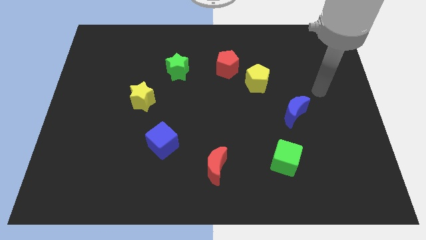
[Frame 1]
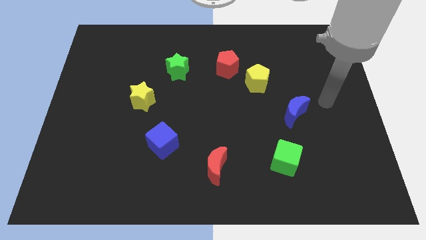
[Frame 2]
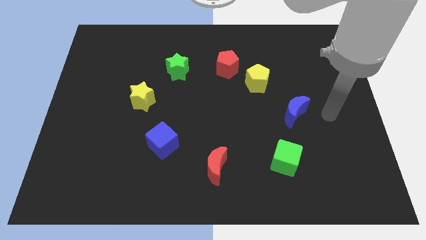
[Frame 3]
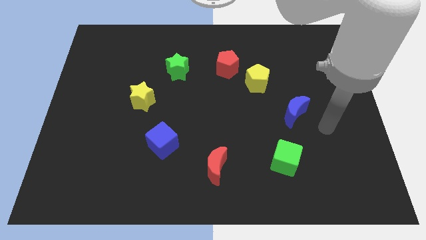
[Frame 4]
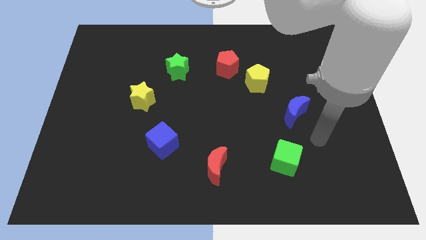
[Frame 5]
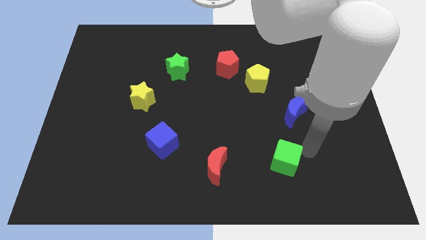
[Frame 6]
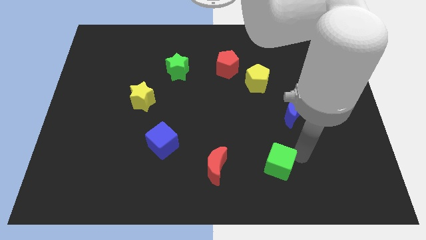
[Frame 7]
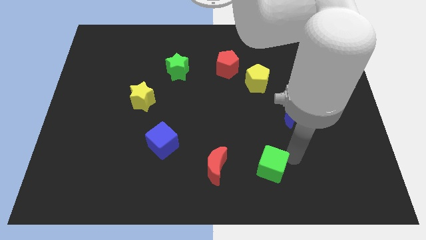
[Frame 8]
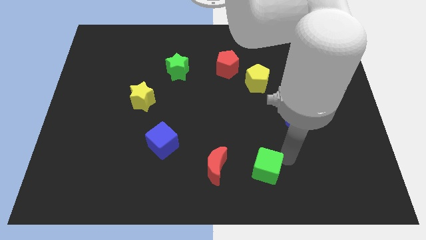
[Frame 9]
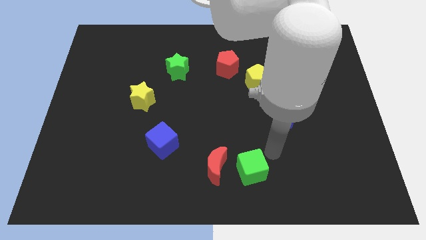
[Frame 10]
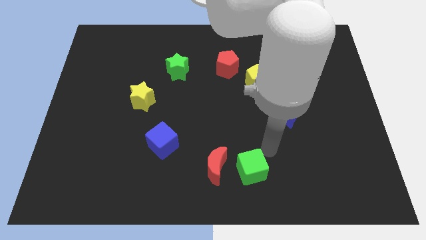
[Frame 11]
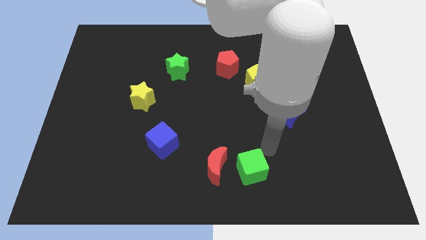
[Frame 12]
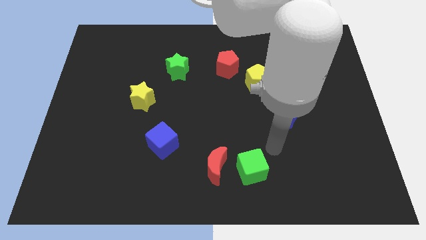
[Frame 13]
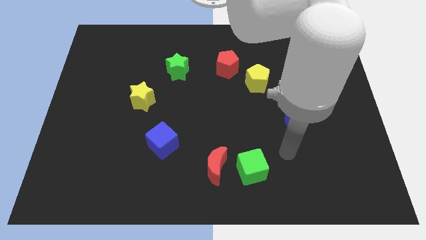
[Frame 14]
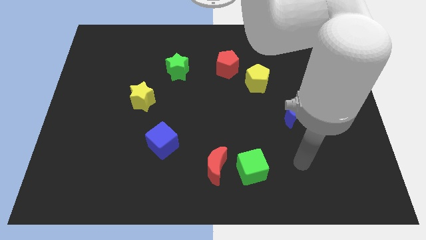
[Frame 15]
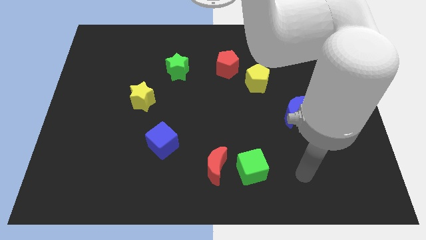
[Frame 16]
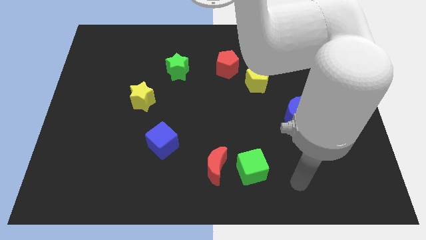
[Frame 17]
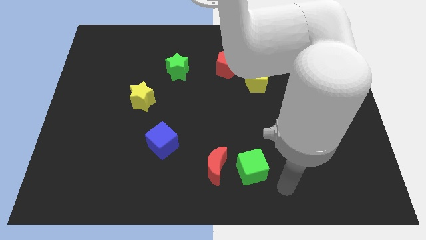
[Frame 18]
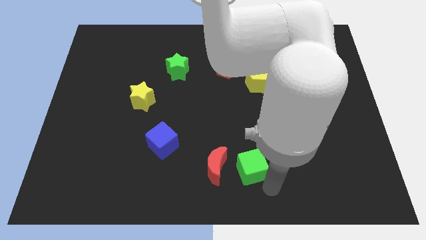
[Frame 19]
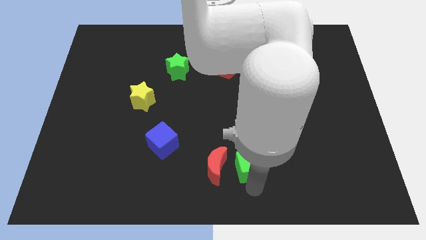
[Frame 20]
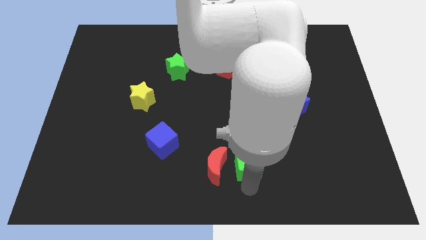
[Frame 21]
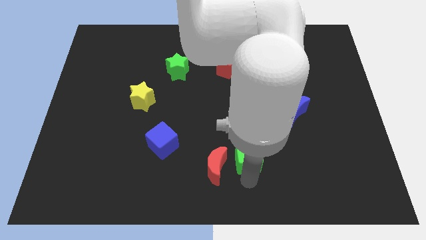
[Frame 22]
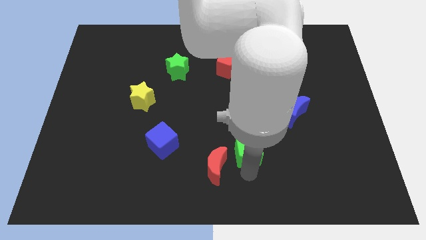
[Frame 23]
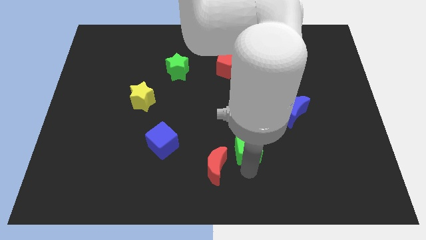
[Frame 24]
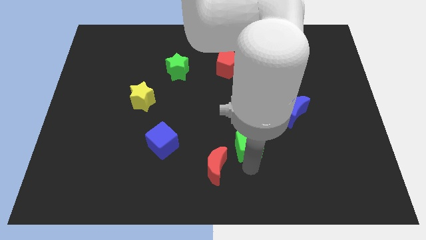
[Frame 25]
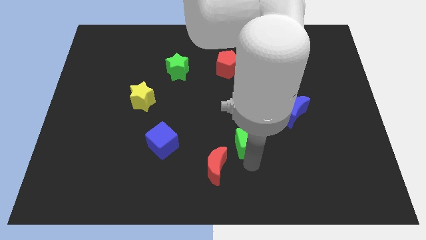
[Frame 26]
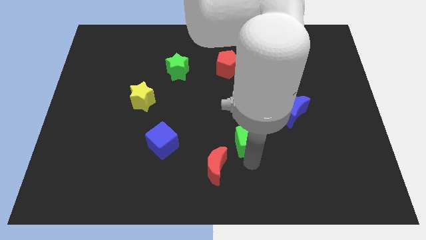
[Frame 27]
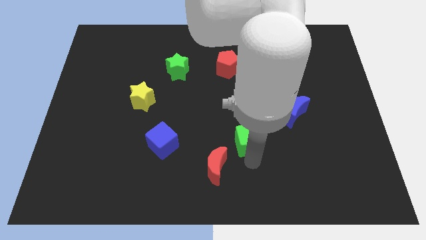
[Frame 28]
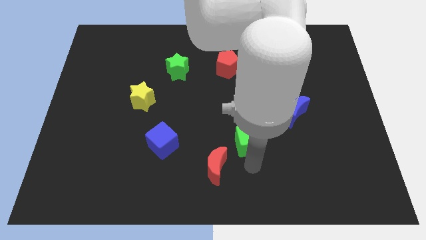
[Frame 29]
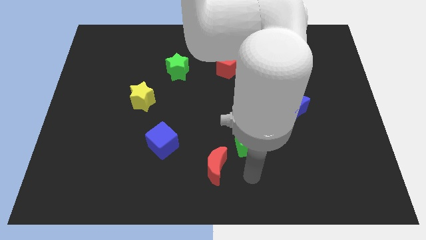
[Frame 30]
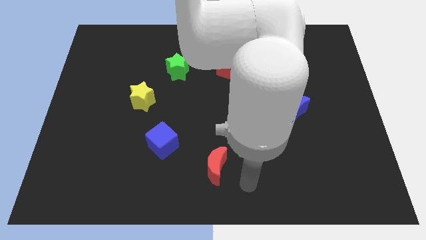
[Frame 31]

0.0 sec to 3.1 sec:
move the green cube to the top right of the red crescent

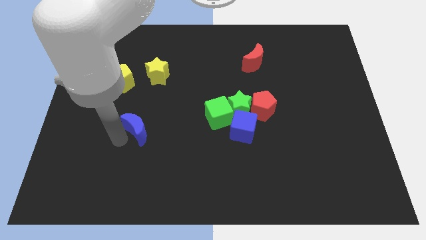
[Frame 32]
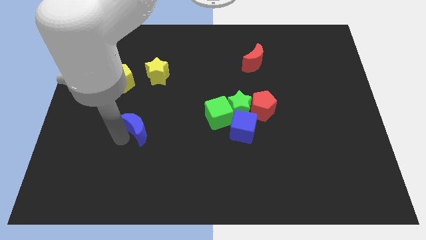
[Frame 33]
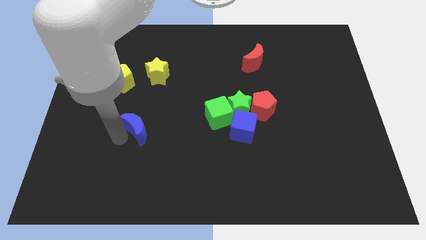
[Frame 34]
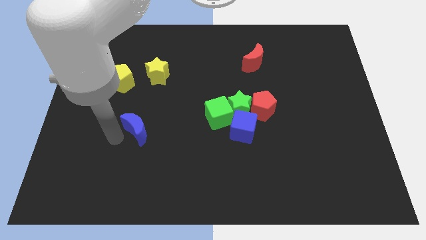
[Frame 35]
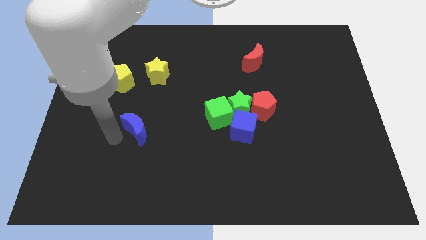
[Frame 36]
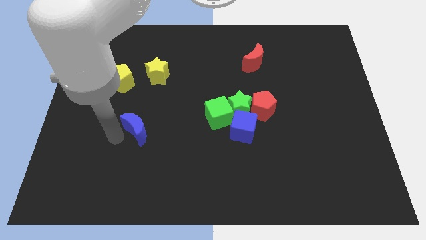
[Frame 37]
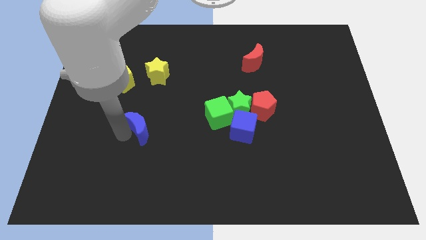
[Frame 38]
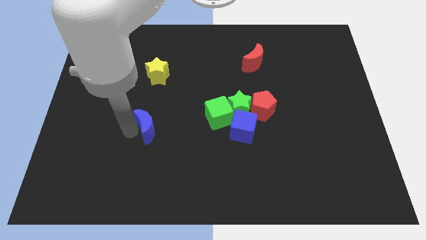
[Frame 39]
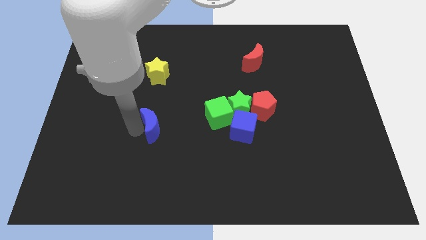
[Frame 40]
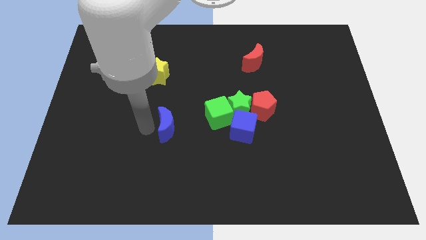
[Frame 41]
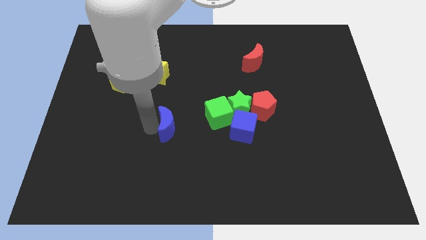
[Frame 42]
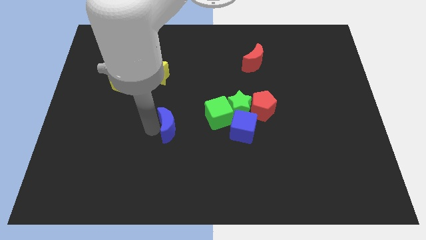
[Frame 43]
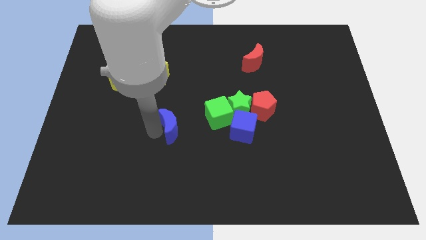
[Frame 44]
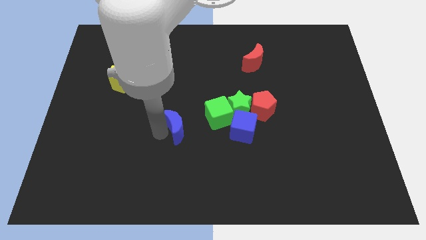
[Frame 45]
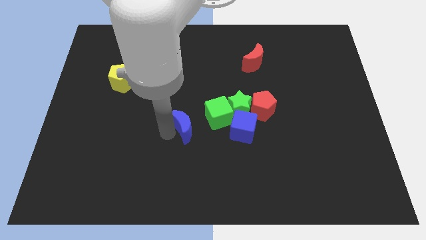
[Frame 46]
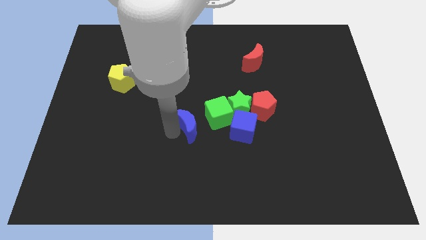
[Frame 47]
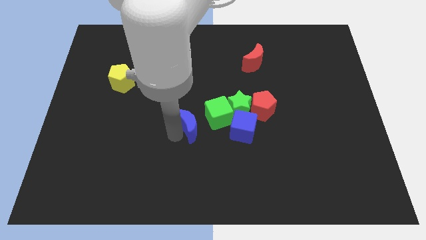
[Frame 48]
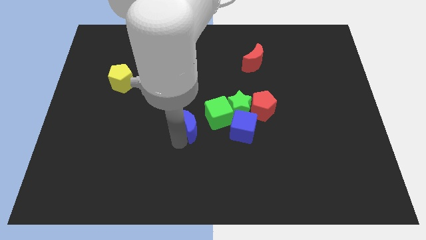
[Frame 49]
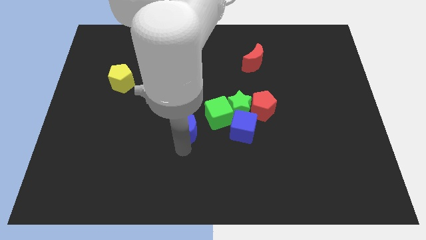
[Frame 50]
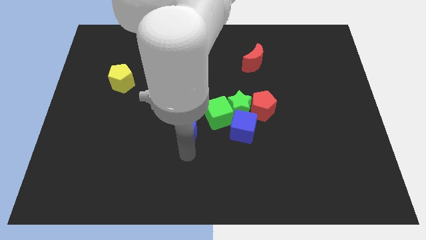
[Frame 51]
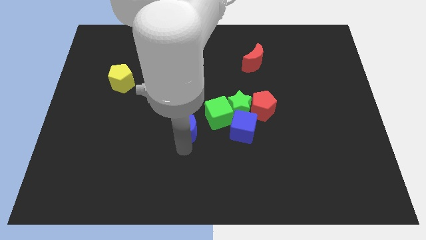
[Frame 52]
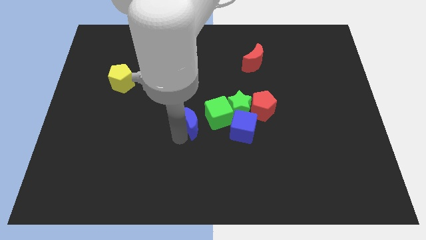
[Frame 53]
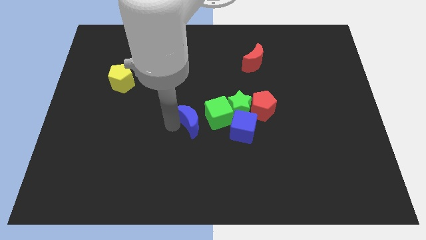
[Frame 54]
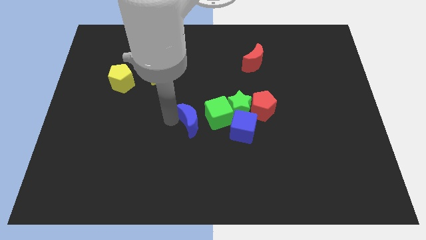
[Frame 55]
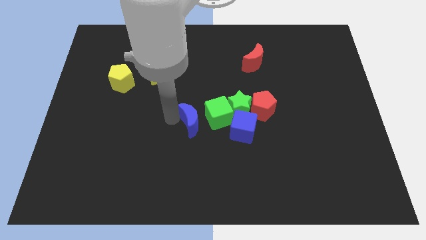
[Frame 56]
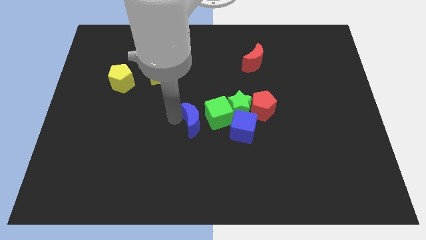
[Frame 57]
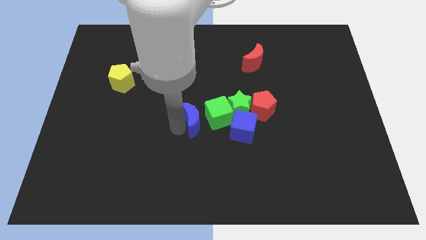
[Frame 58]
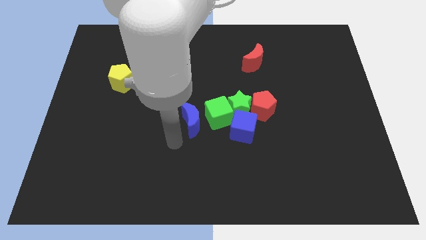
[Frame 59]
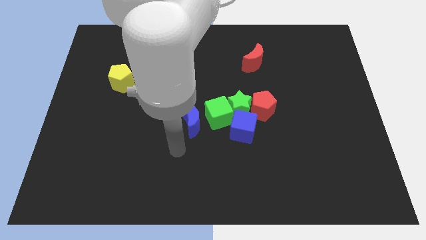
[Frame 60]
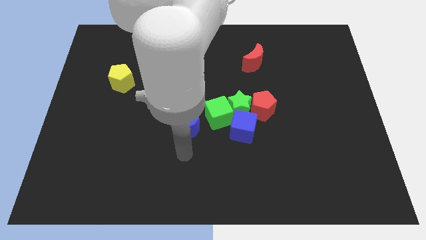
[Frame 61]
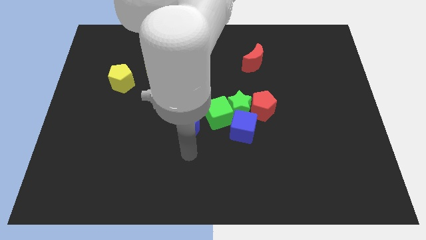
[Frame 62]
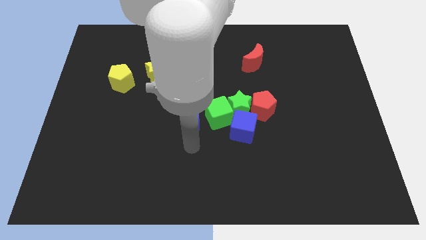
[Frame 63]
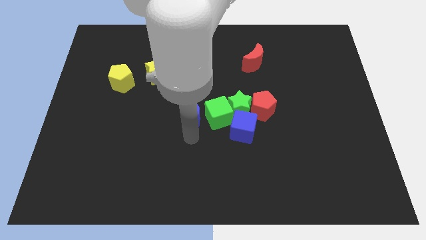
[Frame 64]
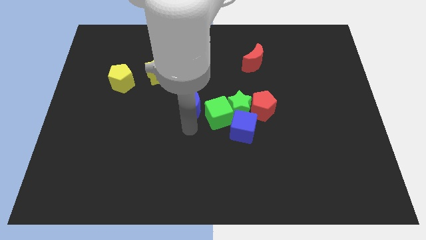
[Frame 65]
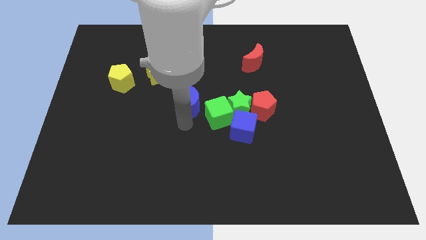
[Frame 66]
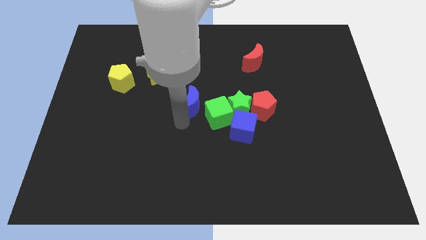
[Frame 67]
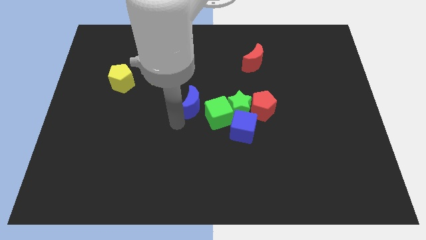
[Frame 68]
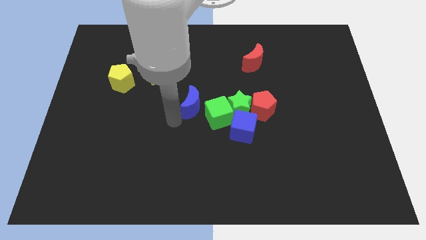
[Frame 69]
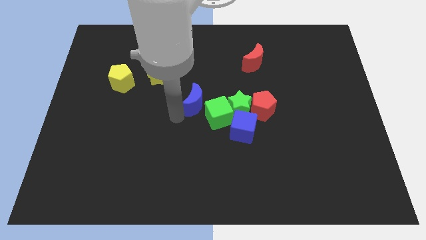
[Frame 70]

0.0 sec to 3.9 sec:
place the blue moon at the top left side of green cube

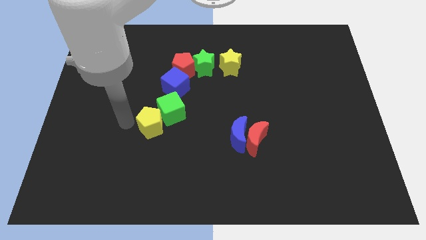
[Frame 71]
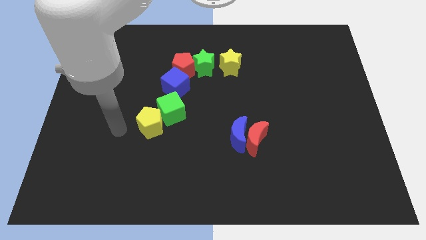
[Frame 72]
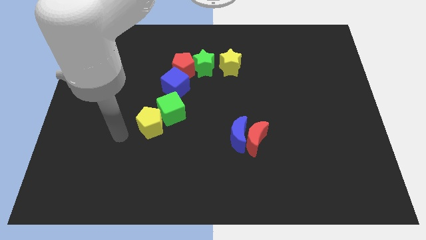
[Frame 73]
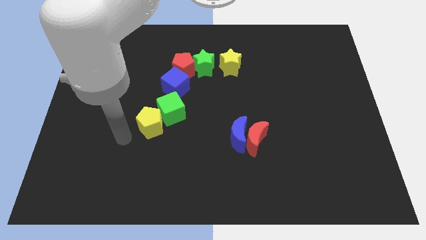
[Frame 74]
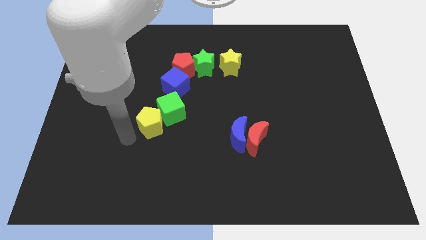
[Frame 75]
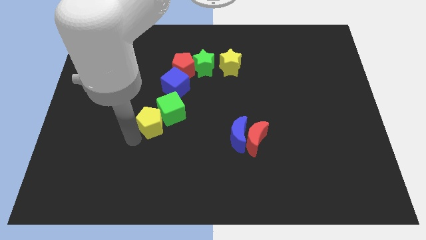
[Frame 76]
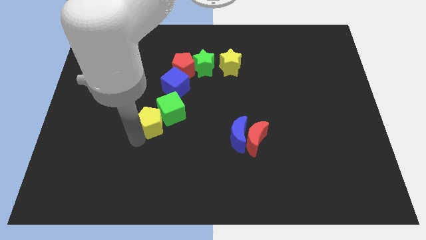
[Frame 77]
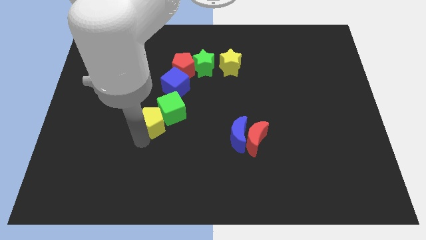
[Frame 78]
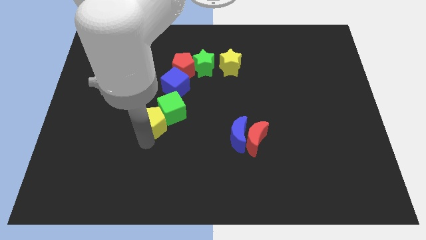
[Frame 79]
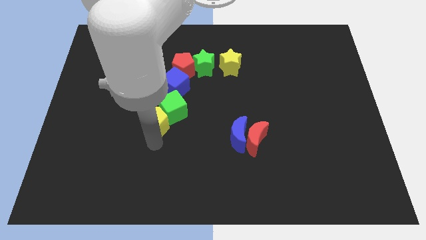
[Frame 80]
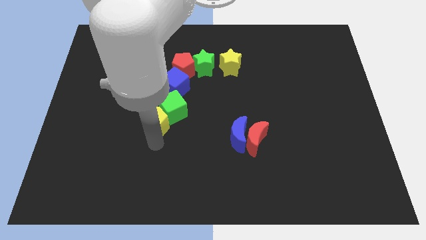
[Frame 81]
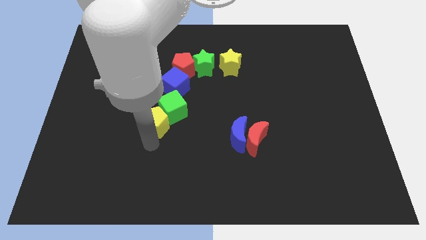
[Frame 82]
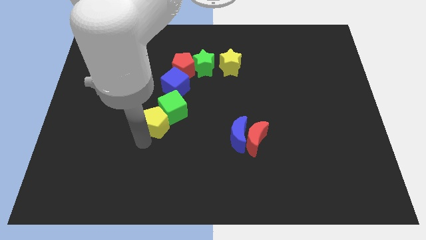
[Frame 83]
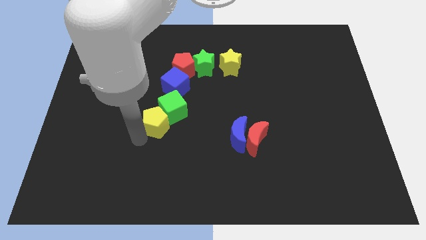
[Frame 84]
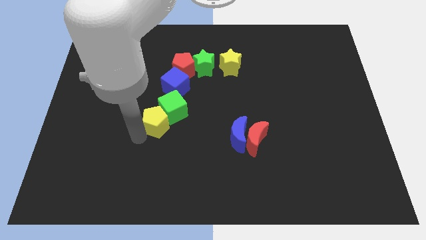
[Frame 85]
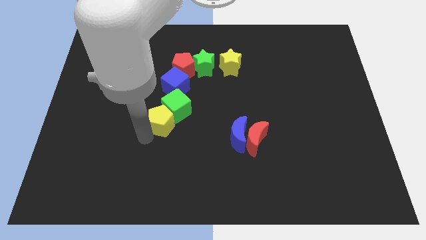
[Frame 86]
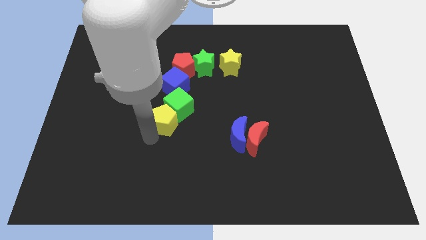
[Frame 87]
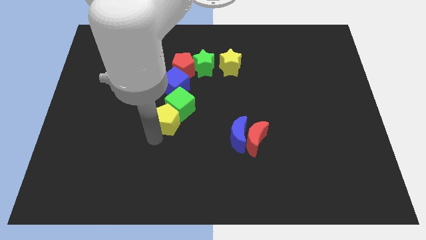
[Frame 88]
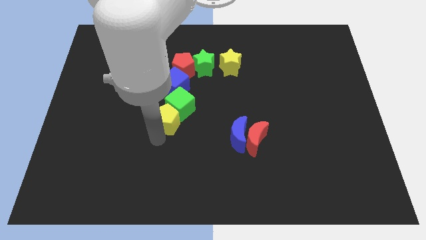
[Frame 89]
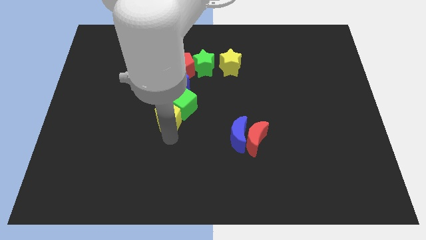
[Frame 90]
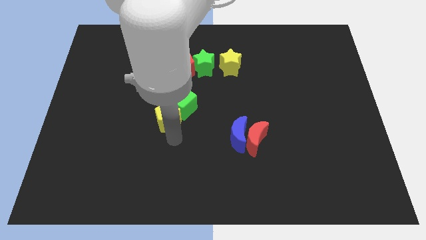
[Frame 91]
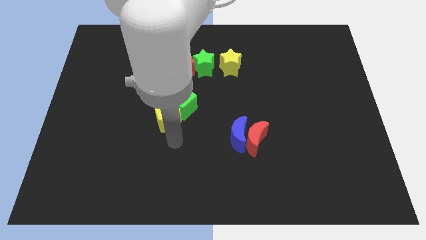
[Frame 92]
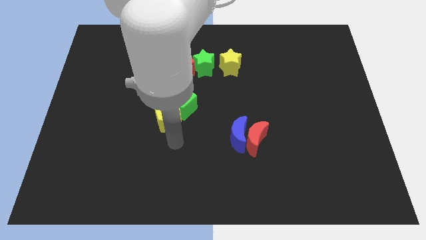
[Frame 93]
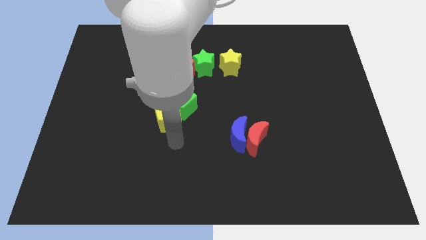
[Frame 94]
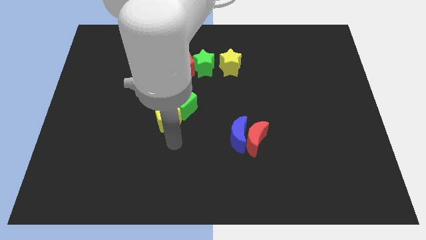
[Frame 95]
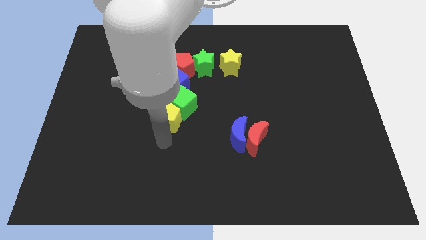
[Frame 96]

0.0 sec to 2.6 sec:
push green cube with yellow pentagon
